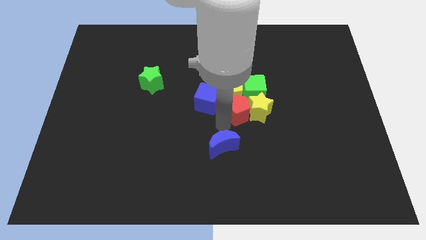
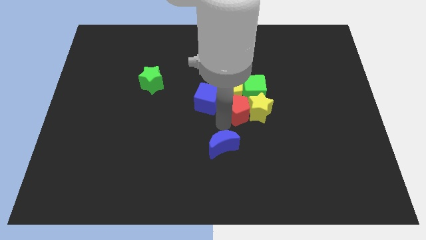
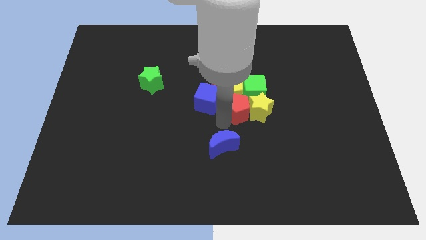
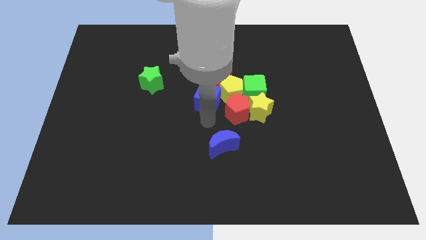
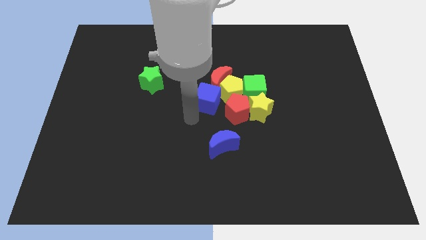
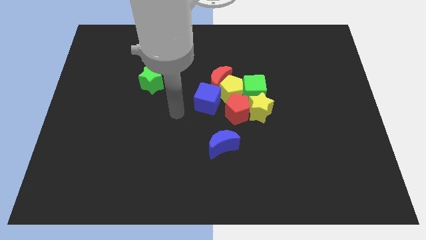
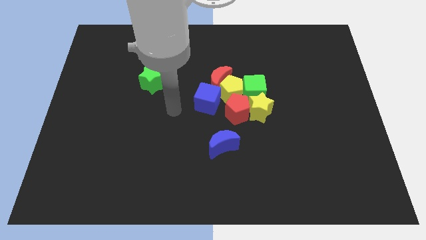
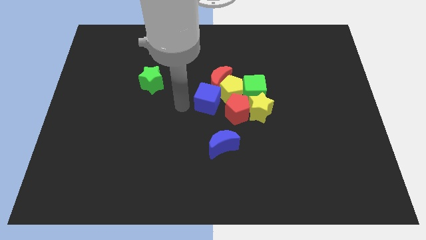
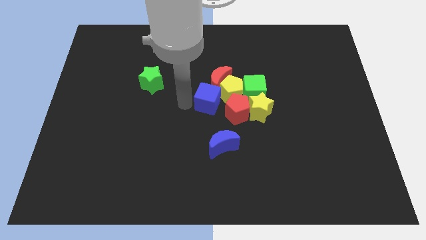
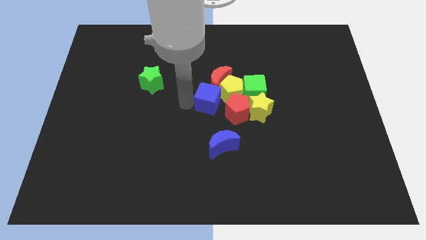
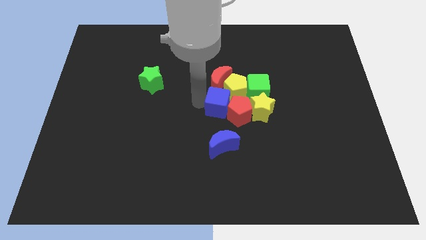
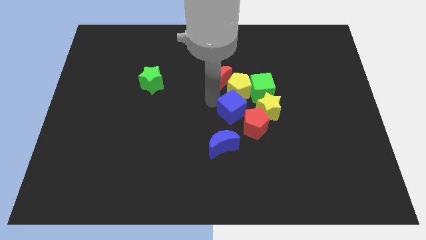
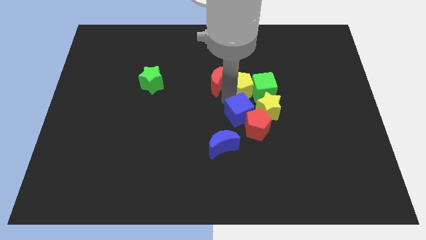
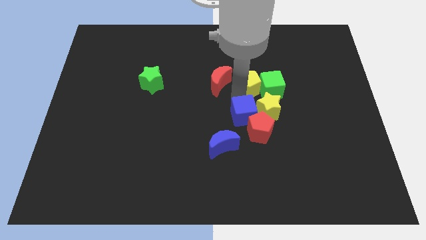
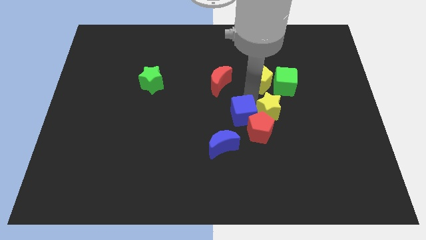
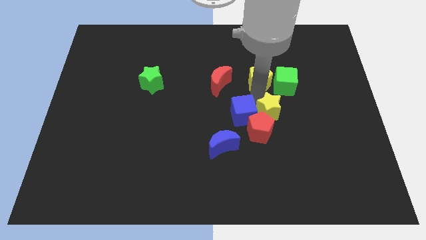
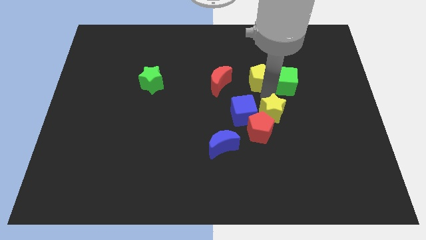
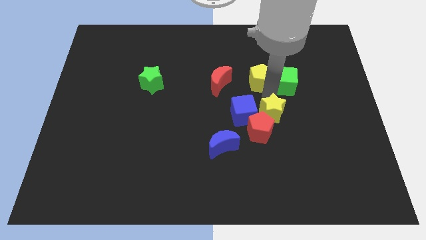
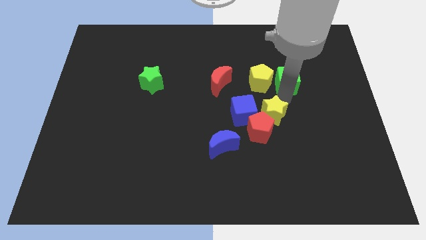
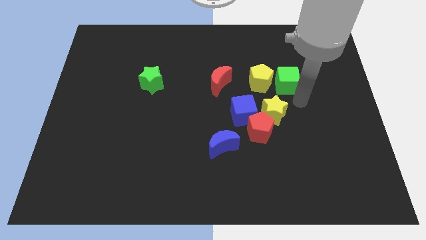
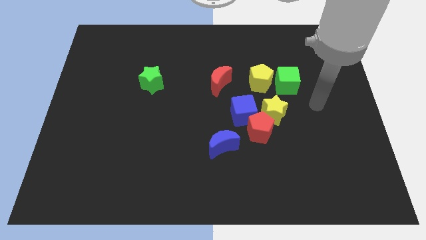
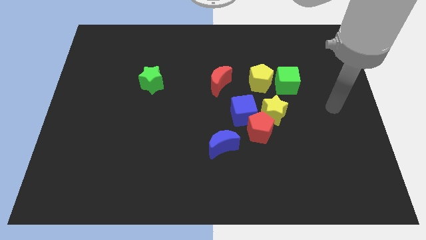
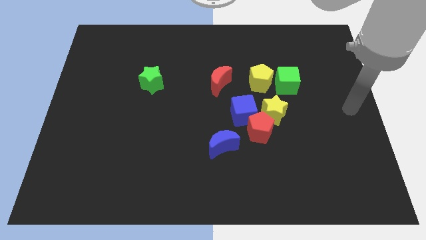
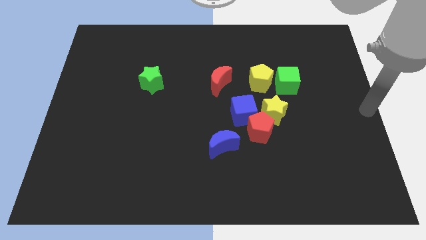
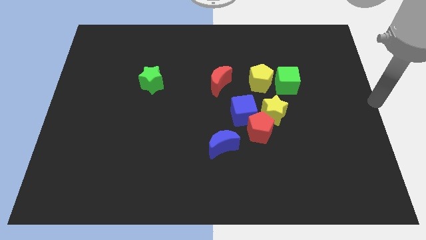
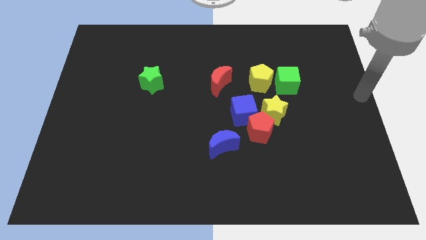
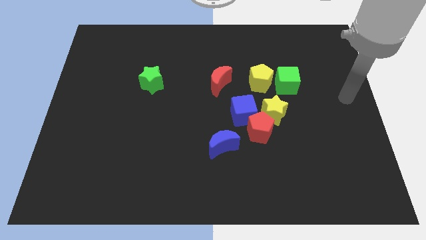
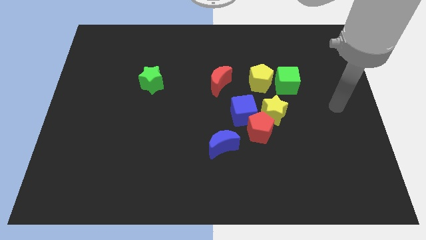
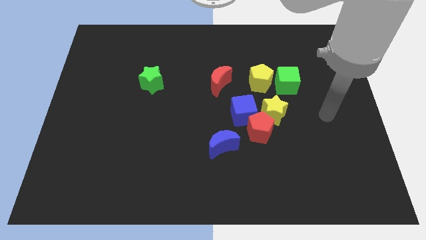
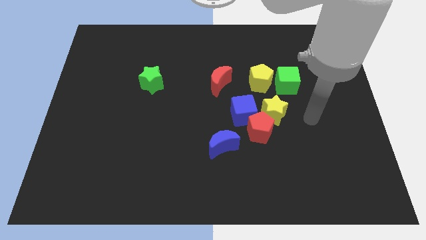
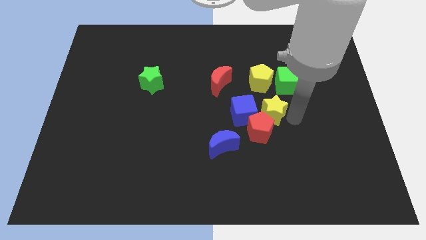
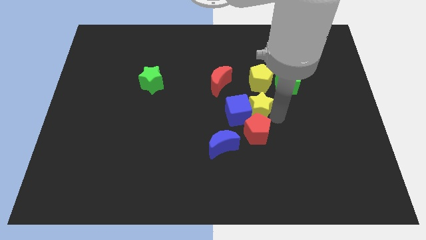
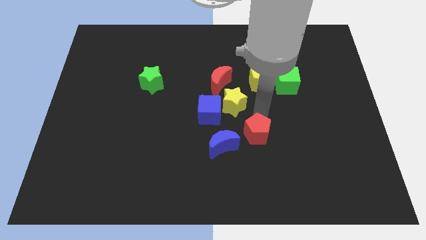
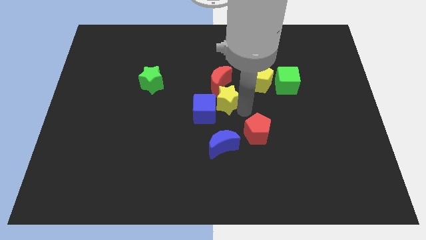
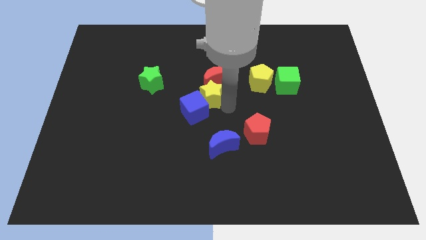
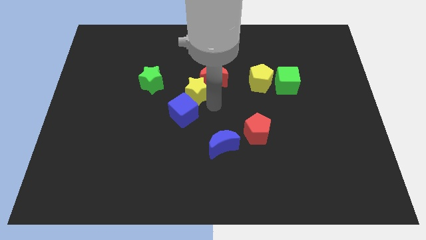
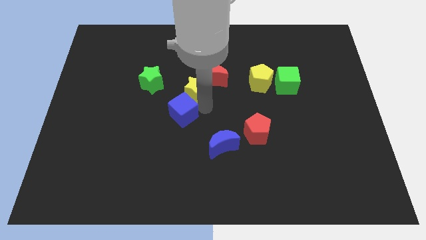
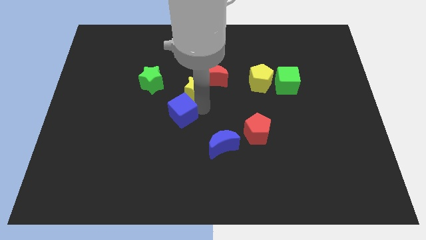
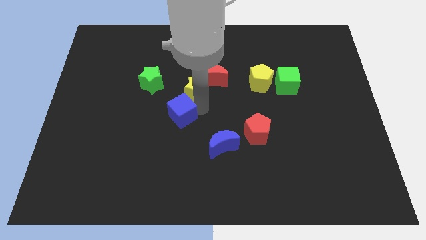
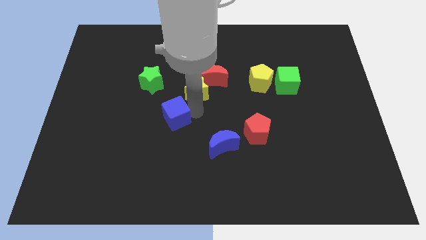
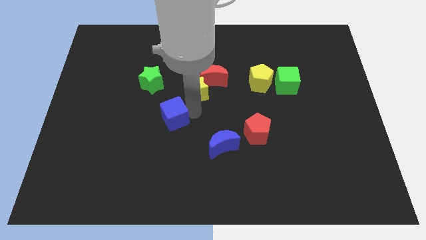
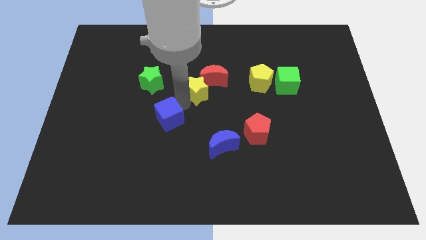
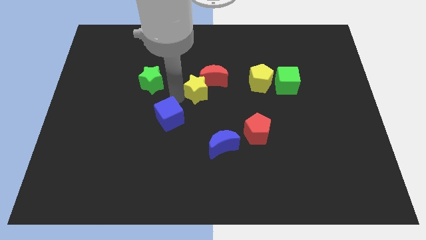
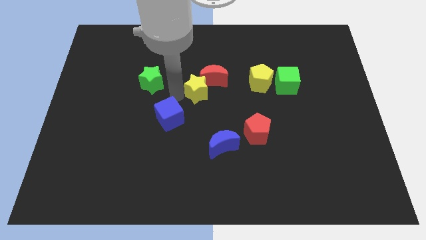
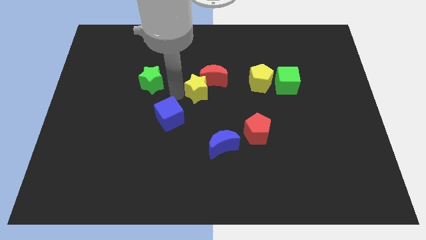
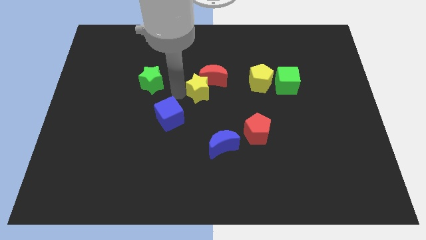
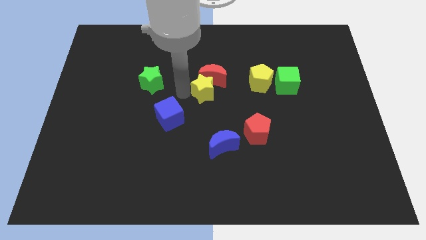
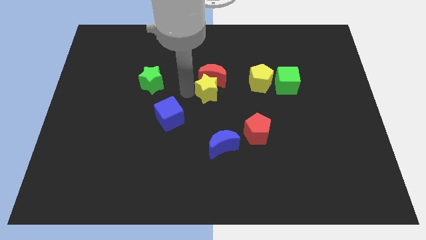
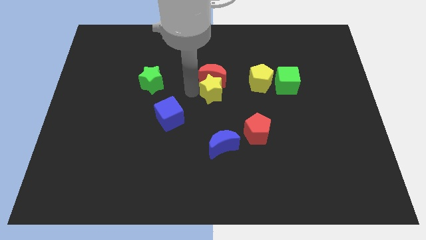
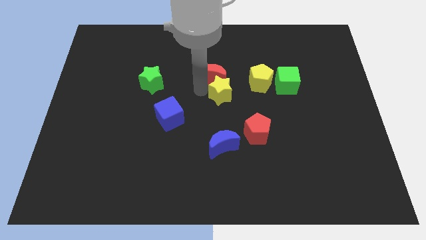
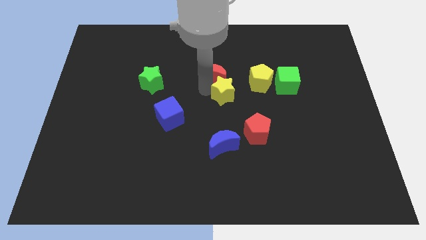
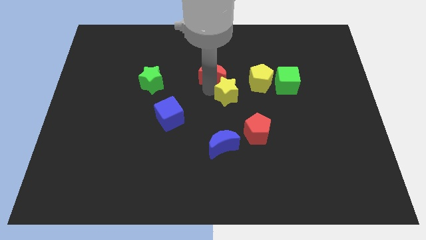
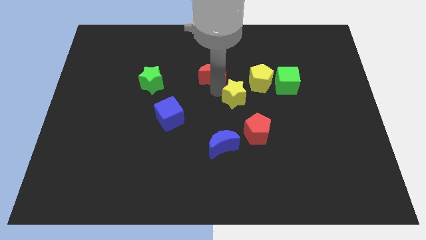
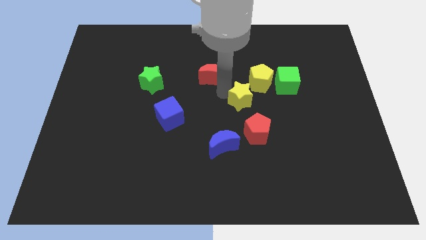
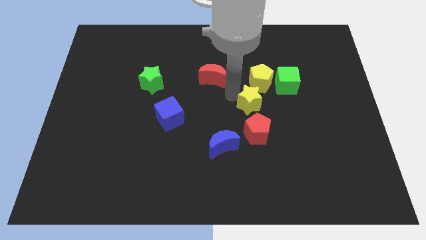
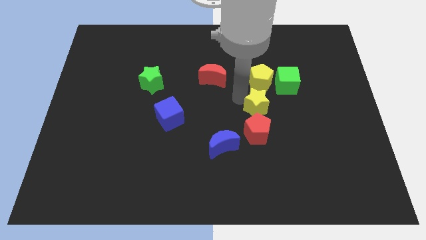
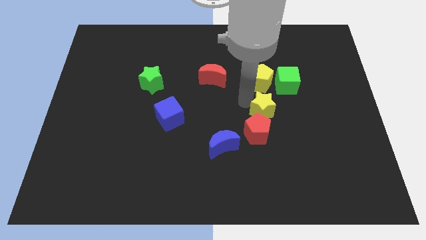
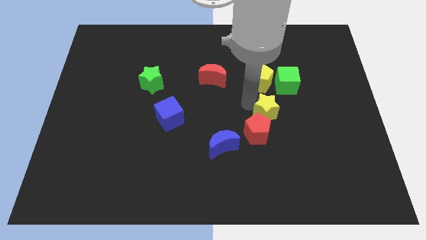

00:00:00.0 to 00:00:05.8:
separate all the blocks by pushing them with the arm

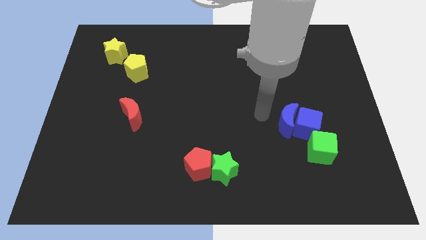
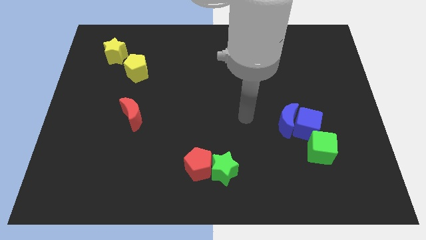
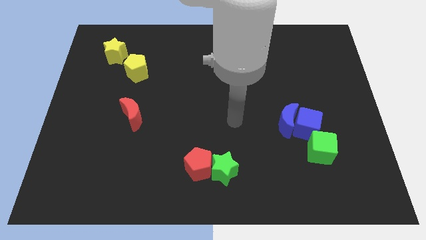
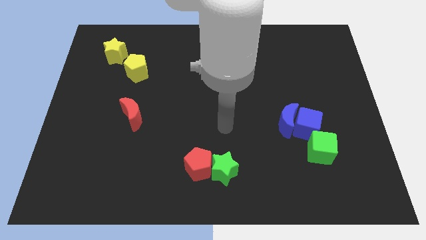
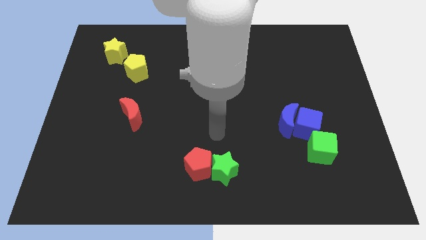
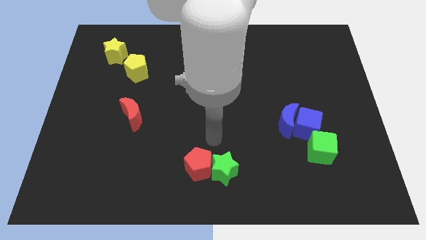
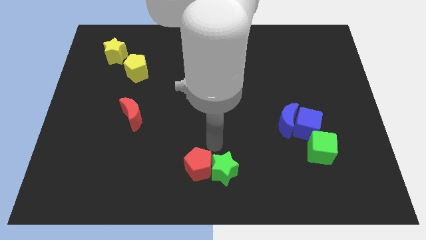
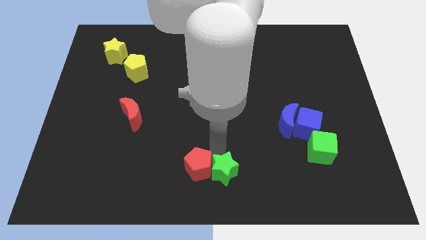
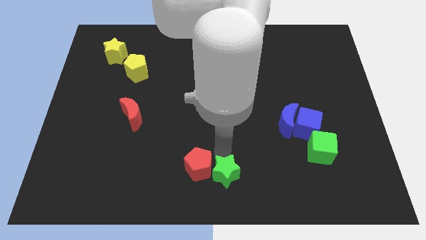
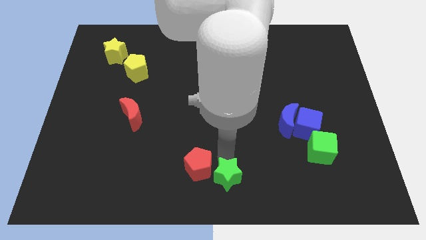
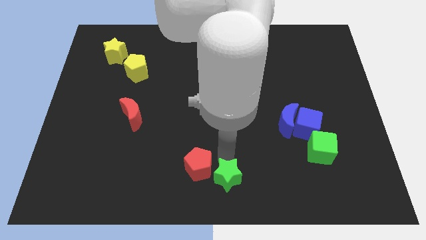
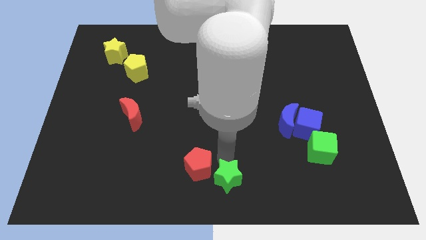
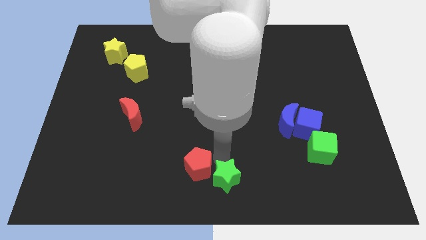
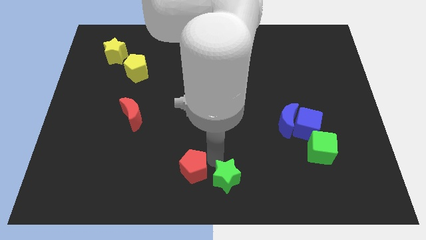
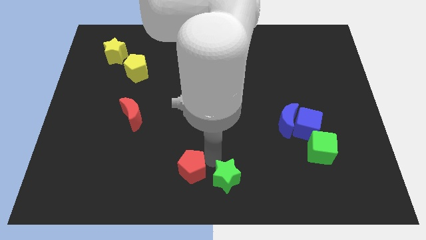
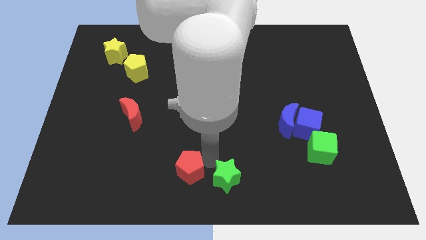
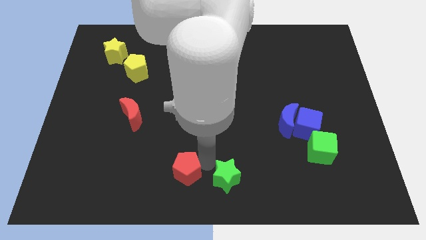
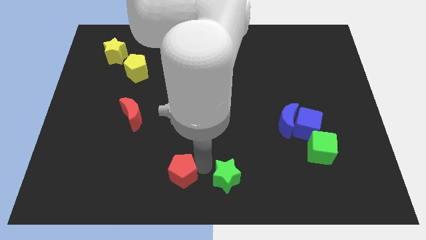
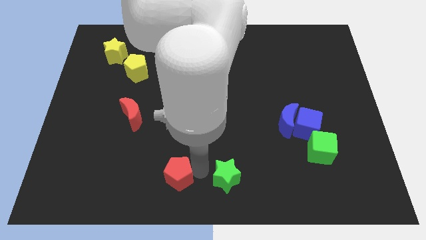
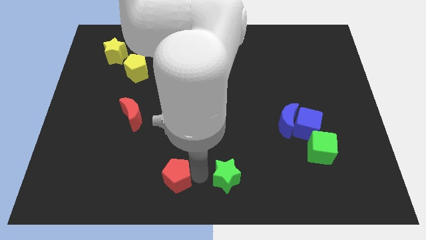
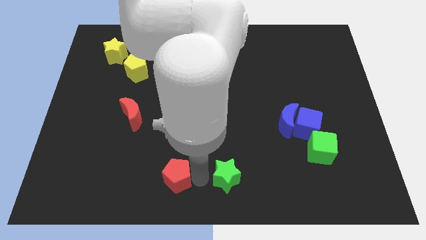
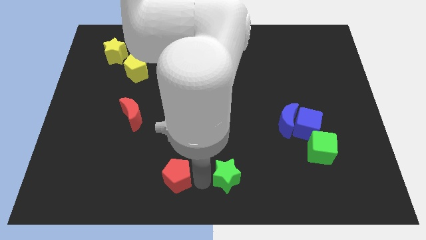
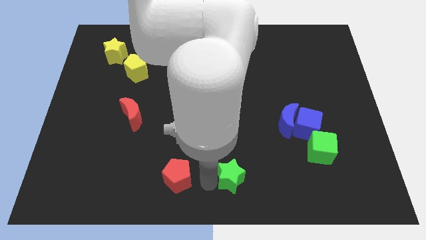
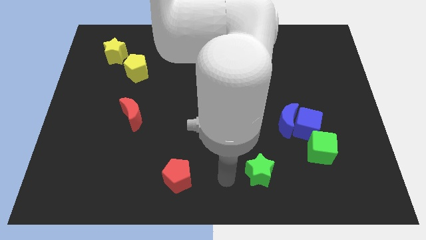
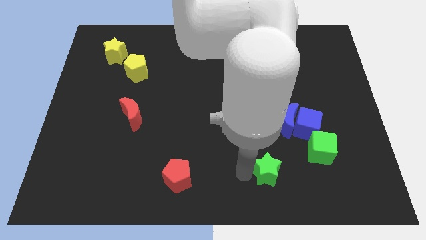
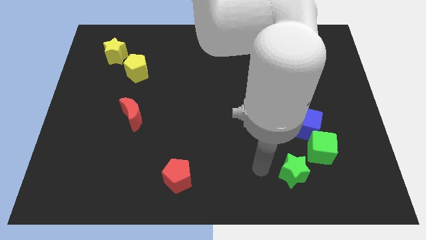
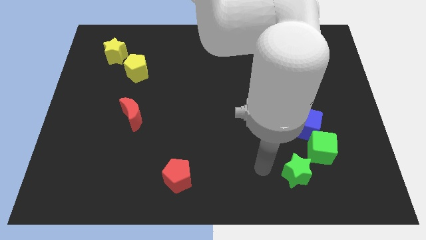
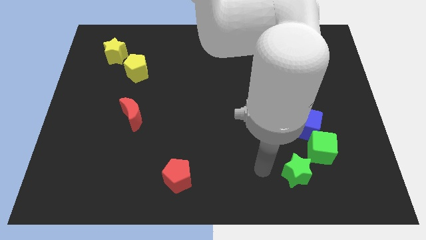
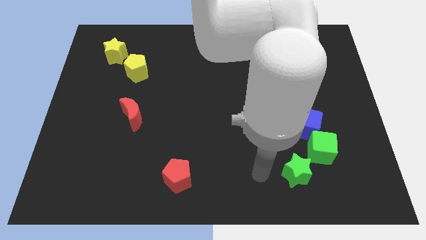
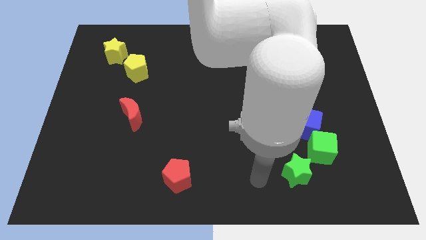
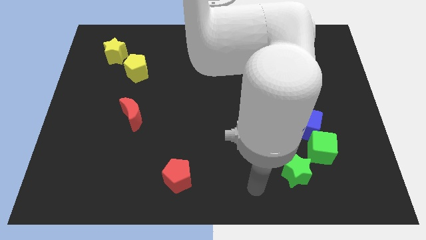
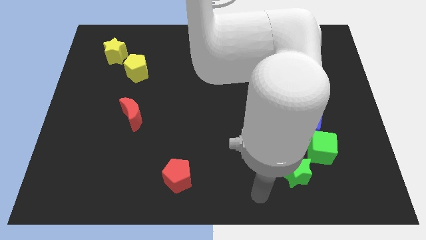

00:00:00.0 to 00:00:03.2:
separate the green star from the red pentagon
